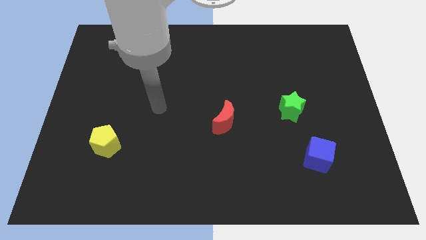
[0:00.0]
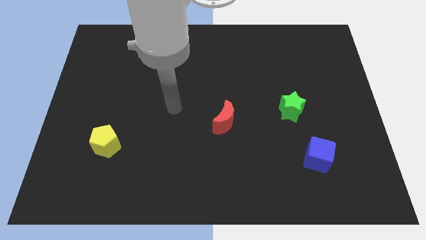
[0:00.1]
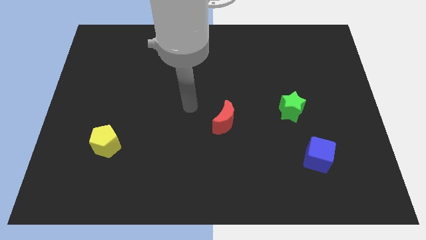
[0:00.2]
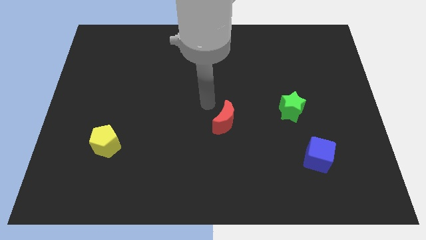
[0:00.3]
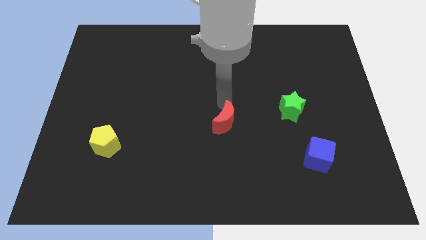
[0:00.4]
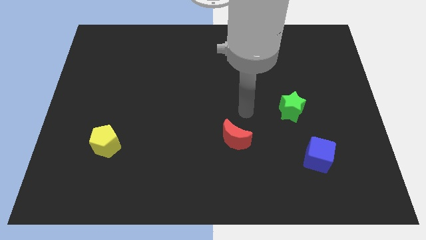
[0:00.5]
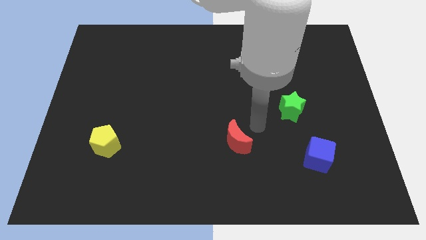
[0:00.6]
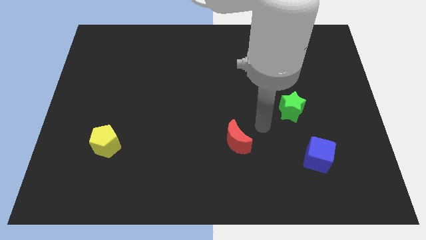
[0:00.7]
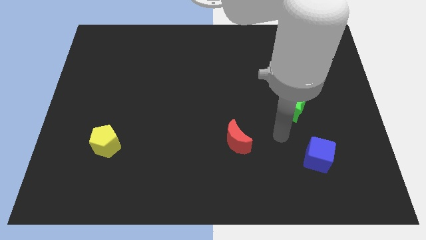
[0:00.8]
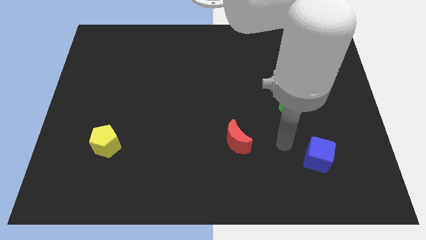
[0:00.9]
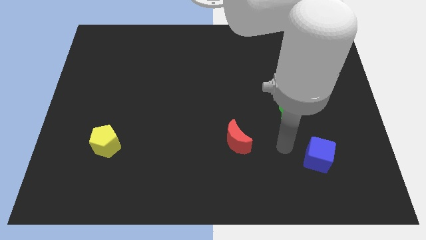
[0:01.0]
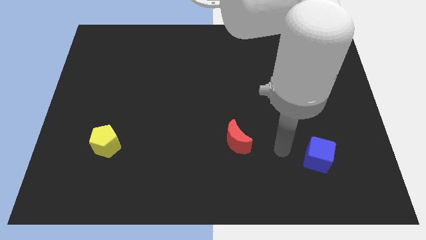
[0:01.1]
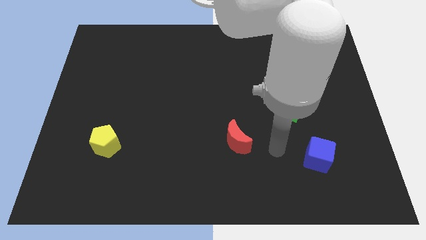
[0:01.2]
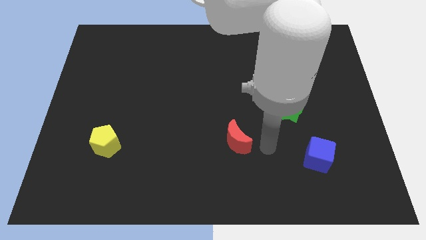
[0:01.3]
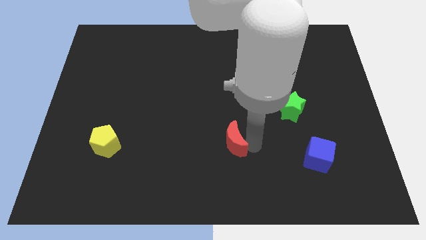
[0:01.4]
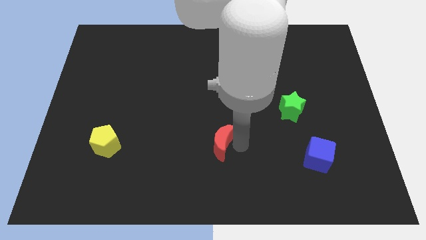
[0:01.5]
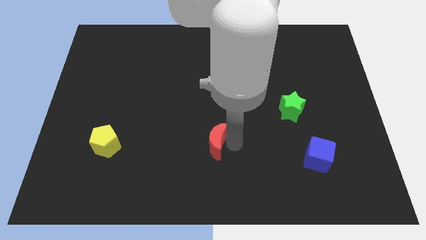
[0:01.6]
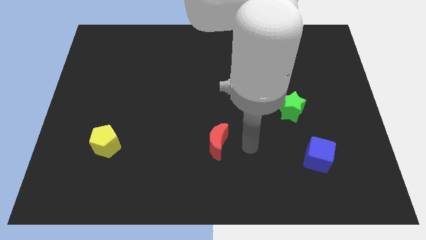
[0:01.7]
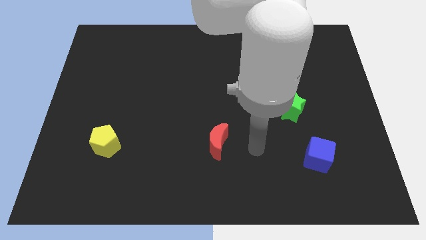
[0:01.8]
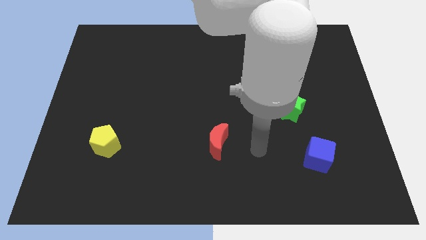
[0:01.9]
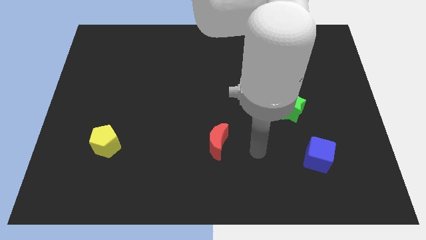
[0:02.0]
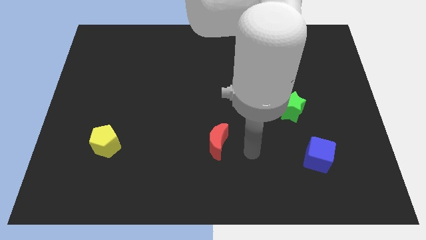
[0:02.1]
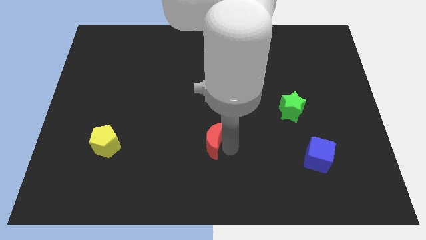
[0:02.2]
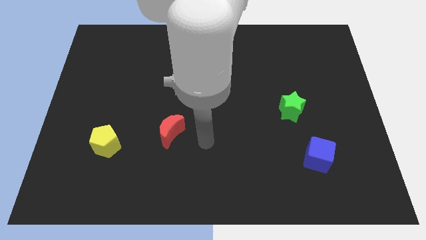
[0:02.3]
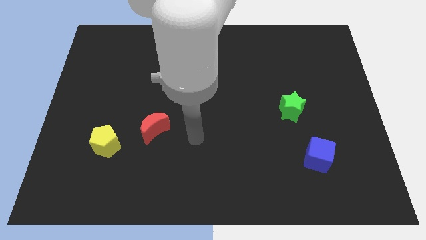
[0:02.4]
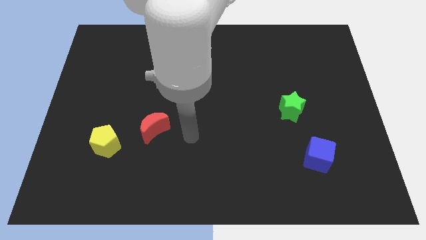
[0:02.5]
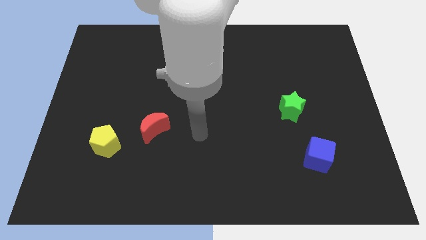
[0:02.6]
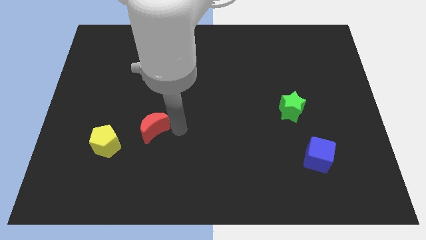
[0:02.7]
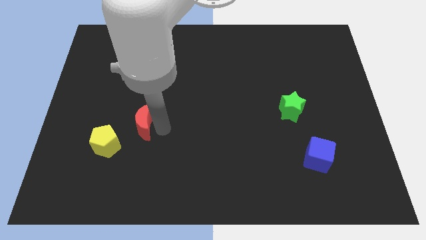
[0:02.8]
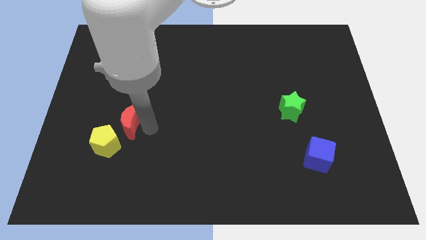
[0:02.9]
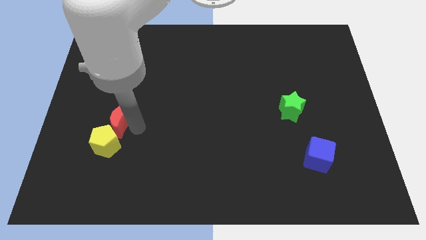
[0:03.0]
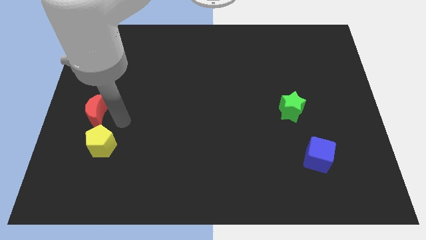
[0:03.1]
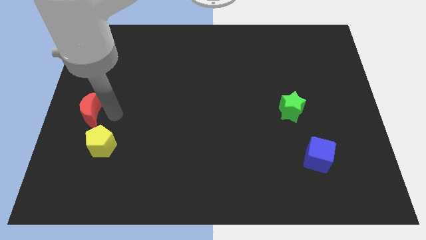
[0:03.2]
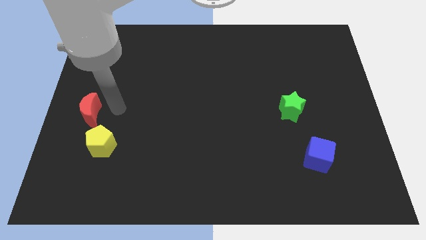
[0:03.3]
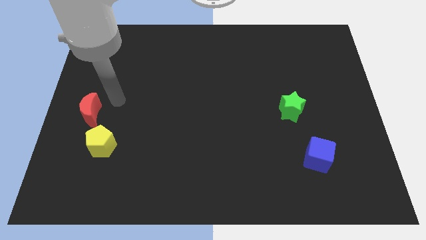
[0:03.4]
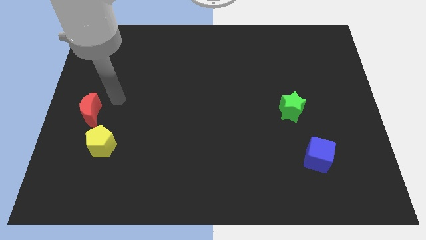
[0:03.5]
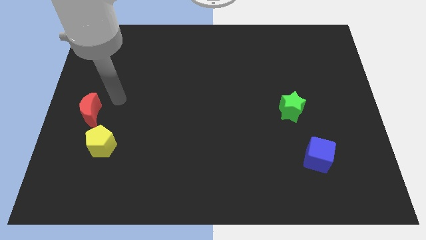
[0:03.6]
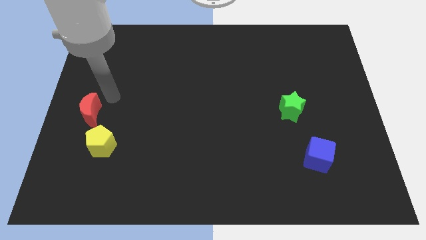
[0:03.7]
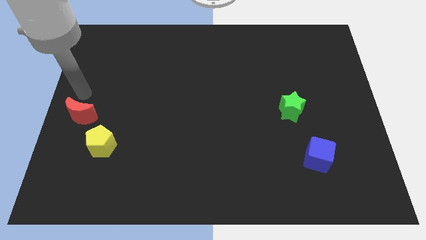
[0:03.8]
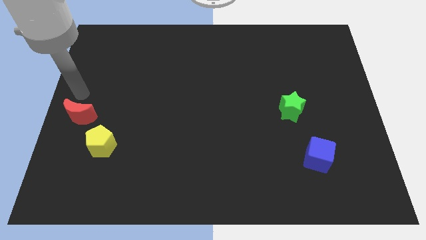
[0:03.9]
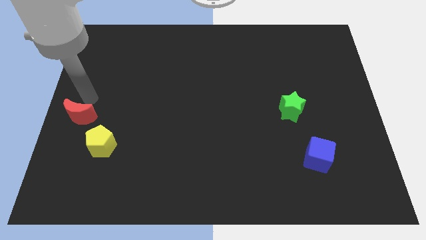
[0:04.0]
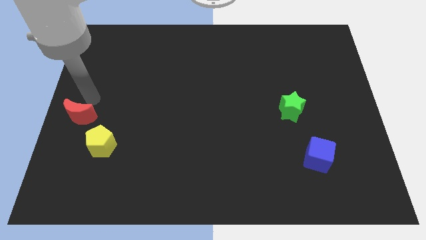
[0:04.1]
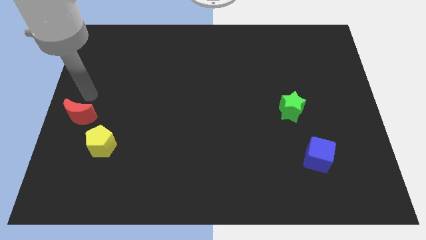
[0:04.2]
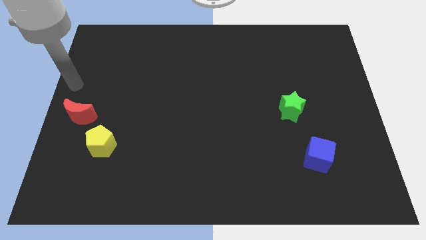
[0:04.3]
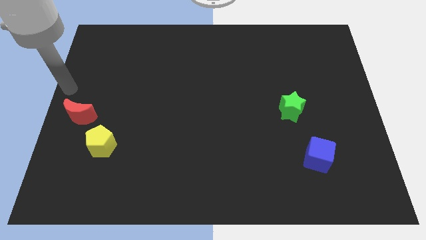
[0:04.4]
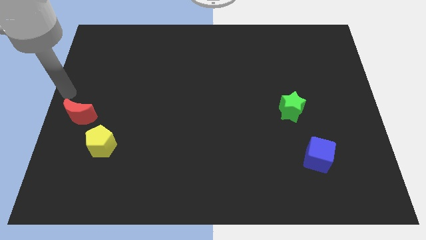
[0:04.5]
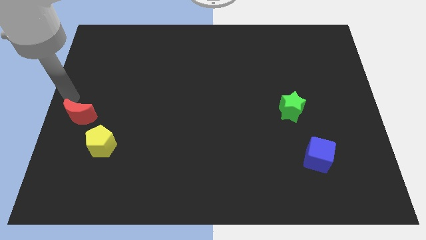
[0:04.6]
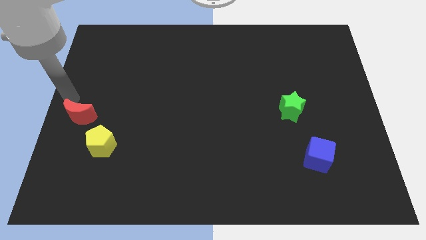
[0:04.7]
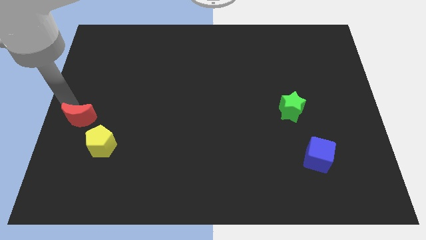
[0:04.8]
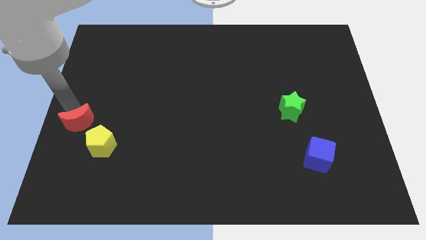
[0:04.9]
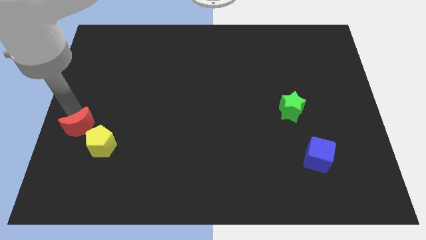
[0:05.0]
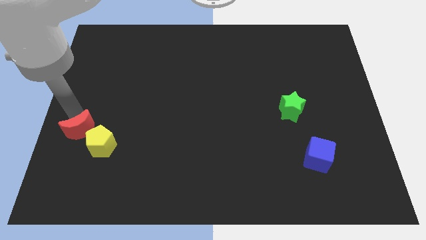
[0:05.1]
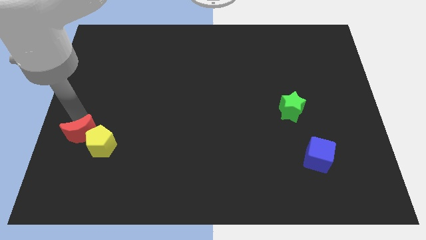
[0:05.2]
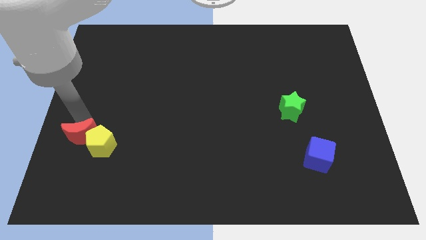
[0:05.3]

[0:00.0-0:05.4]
push the moon next to the yellow pentagon

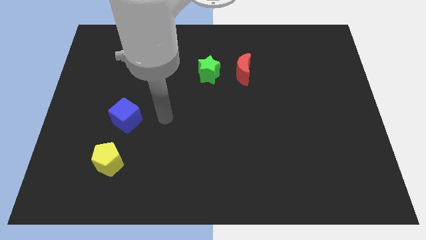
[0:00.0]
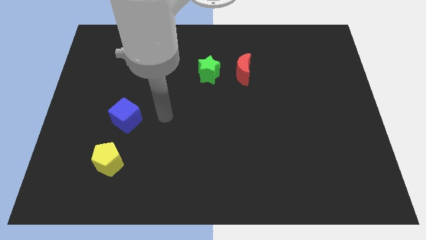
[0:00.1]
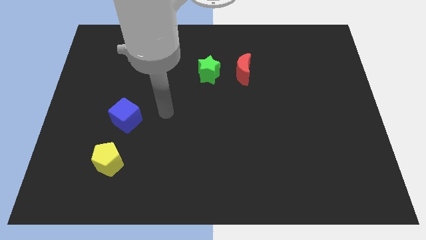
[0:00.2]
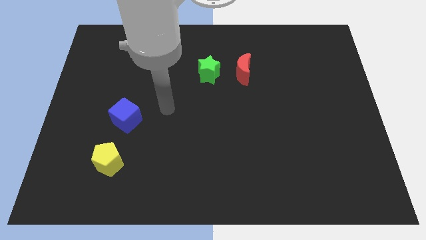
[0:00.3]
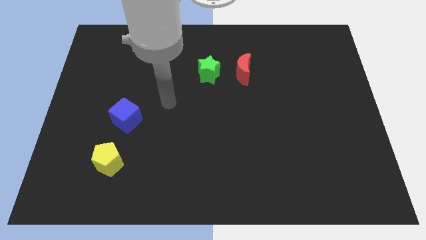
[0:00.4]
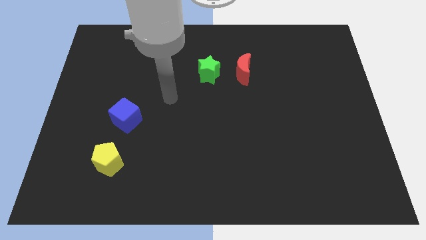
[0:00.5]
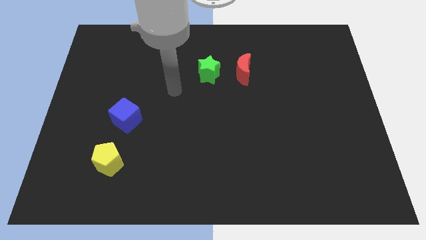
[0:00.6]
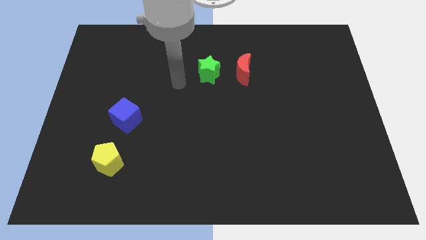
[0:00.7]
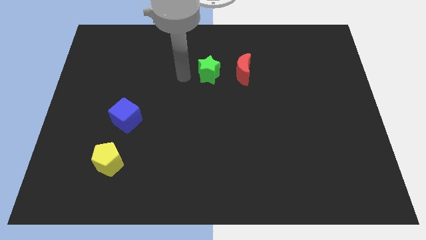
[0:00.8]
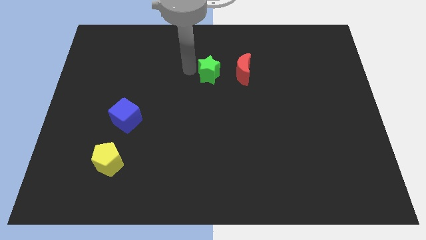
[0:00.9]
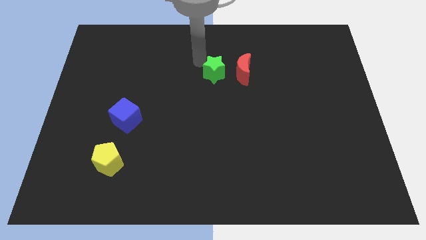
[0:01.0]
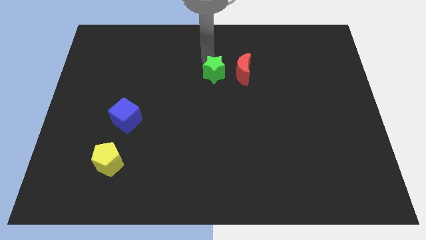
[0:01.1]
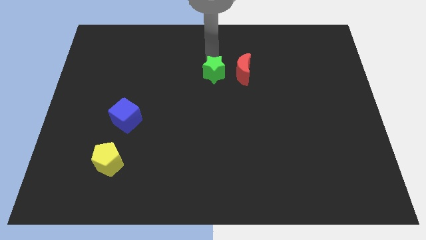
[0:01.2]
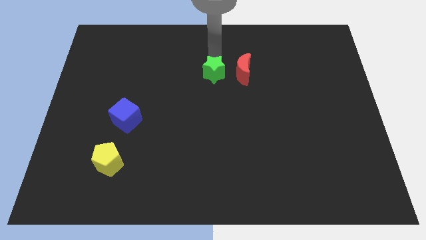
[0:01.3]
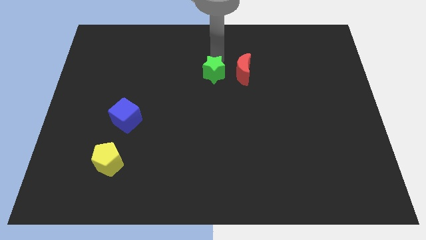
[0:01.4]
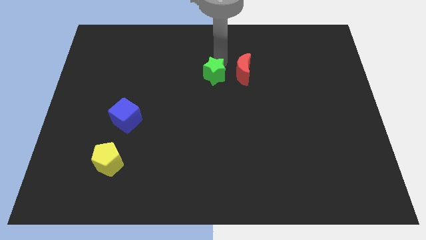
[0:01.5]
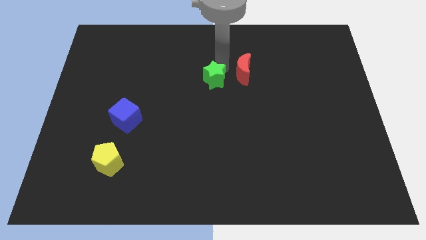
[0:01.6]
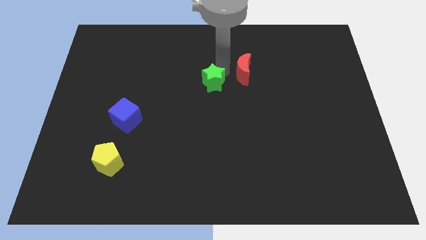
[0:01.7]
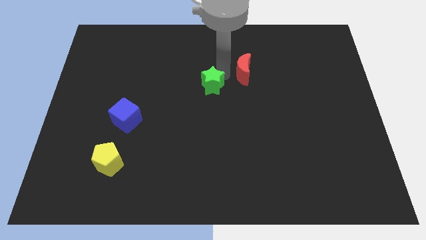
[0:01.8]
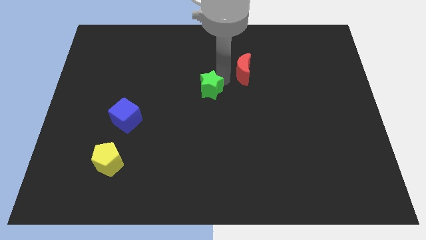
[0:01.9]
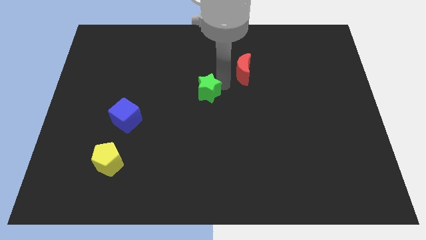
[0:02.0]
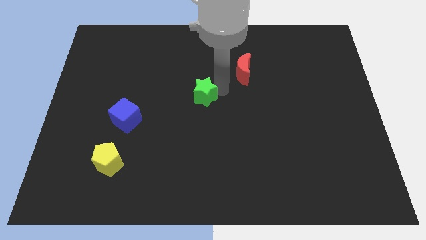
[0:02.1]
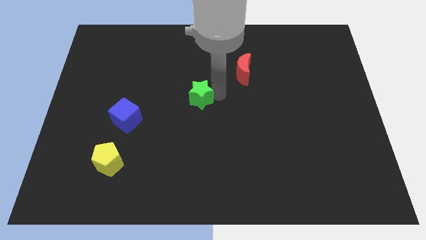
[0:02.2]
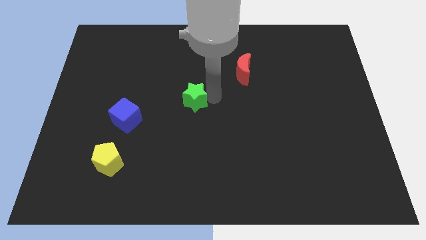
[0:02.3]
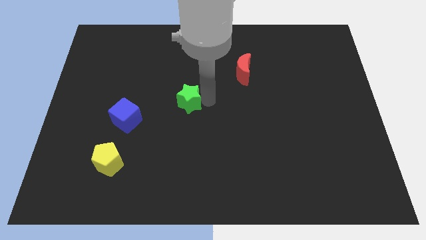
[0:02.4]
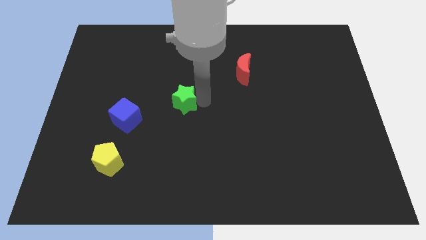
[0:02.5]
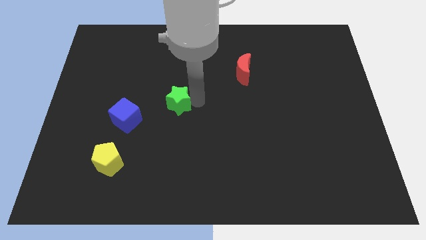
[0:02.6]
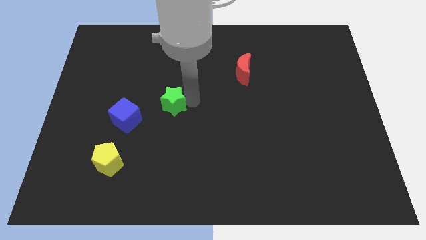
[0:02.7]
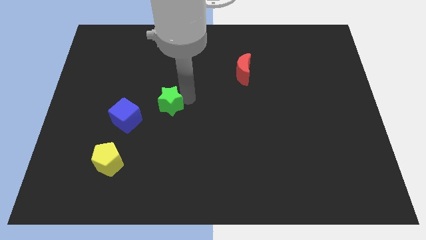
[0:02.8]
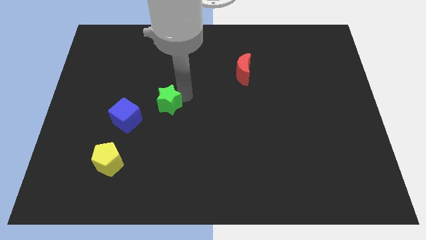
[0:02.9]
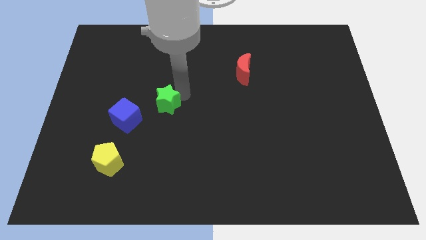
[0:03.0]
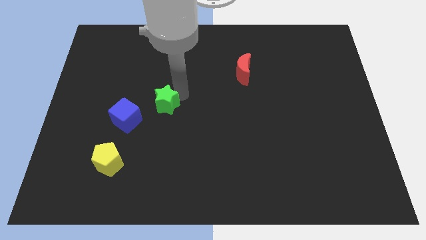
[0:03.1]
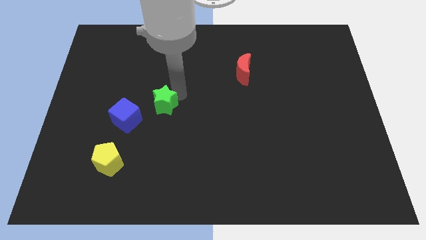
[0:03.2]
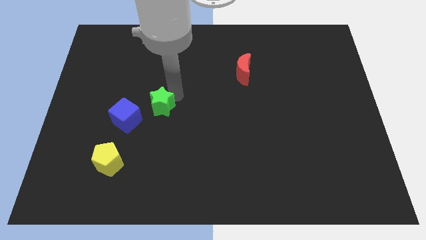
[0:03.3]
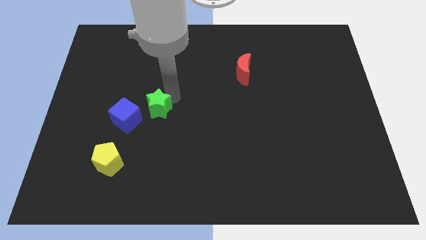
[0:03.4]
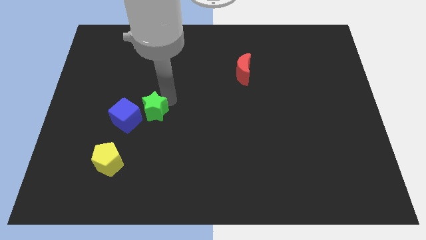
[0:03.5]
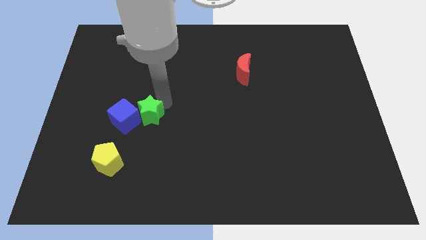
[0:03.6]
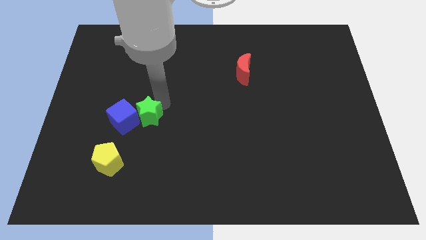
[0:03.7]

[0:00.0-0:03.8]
slide the green block towards the cube
